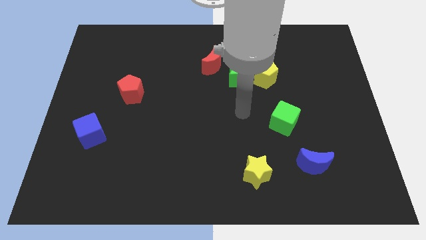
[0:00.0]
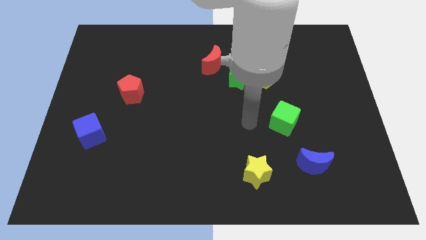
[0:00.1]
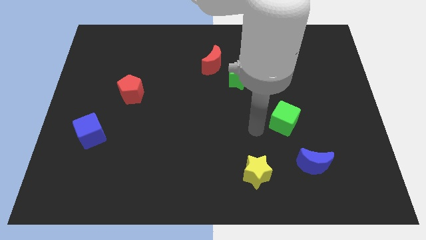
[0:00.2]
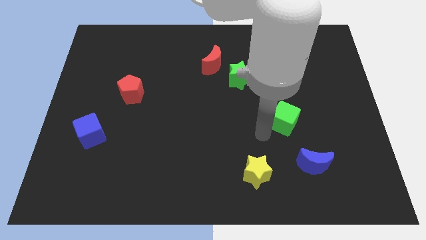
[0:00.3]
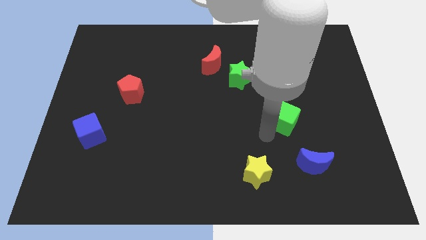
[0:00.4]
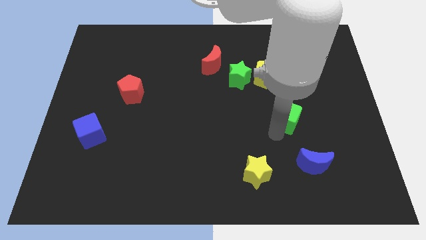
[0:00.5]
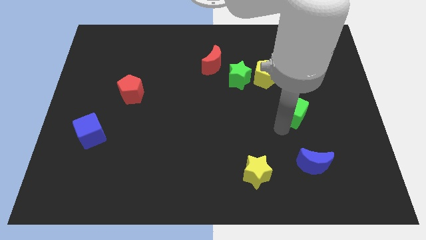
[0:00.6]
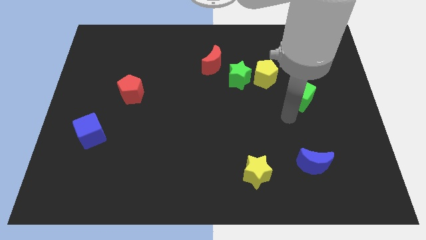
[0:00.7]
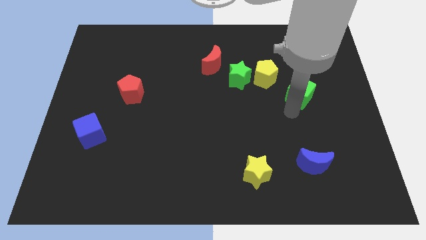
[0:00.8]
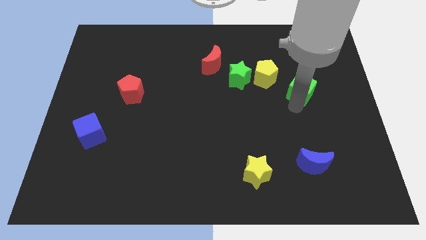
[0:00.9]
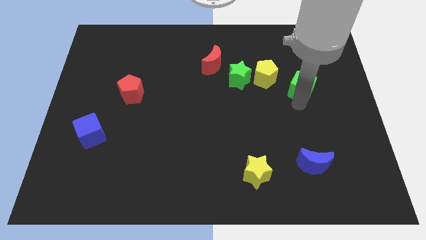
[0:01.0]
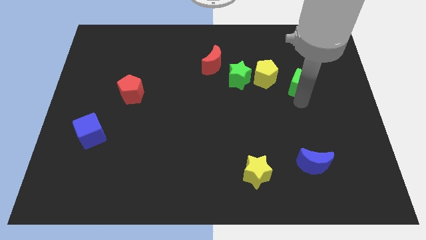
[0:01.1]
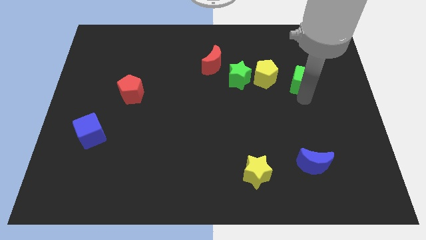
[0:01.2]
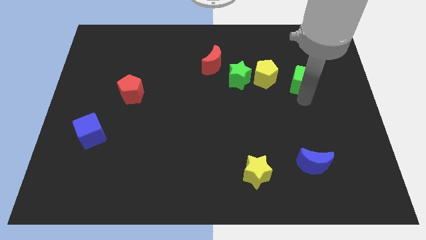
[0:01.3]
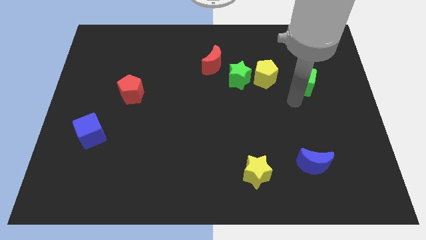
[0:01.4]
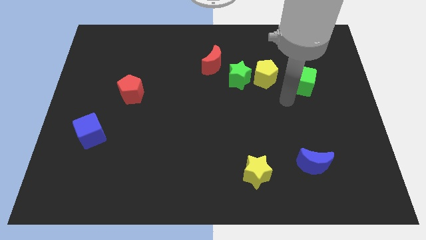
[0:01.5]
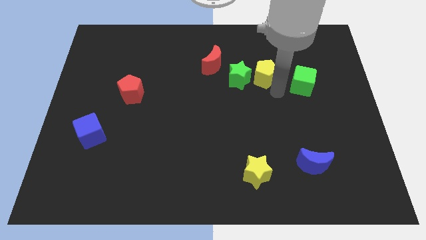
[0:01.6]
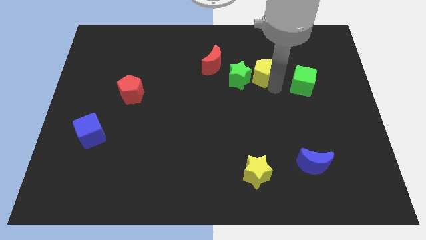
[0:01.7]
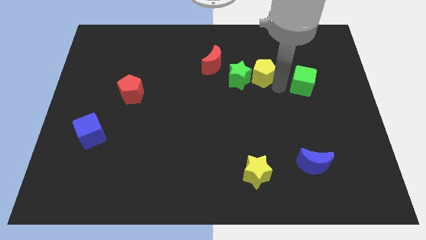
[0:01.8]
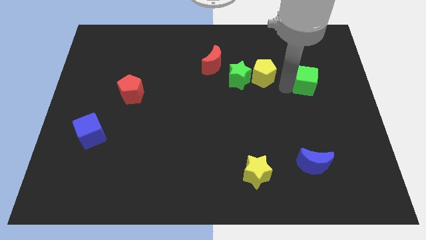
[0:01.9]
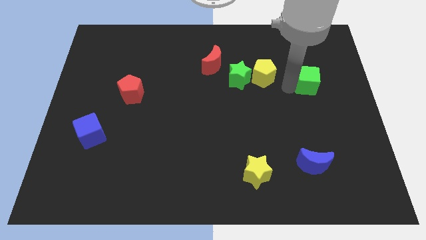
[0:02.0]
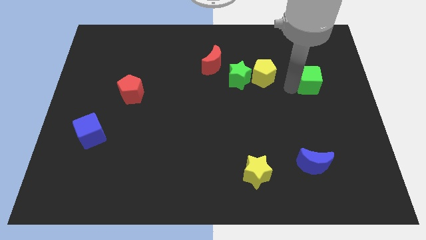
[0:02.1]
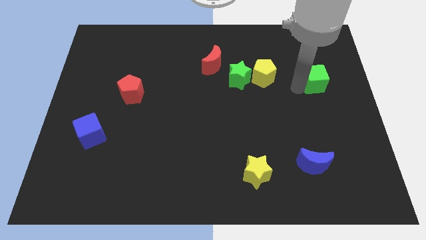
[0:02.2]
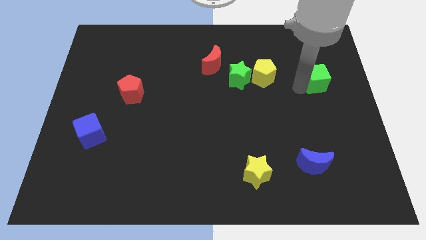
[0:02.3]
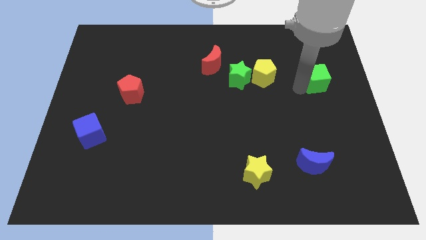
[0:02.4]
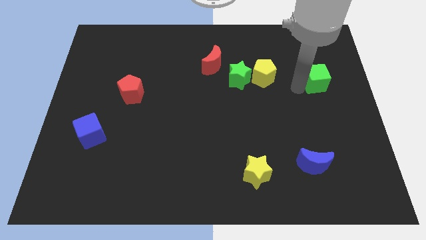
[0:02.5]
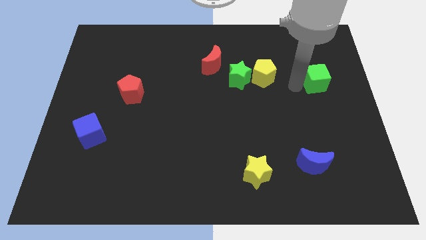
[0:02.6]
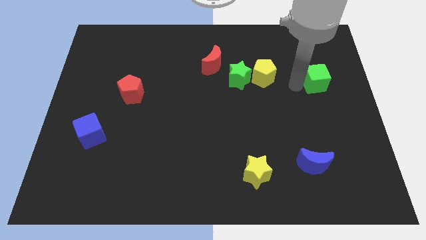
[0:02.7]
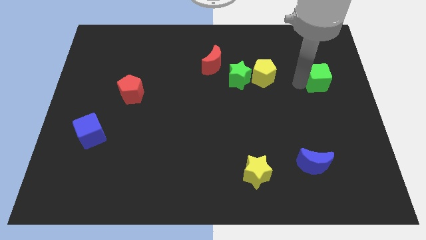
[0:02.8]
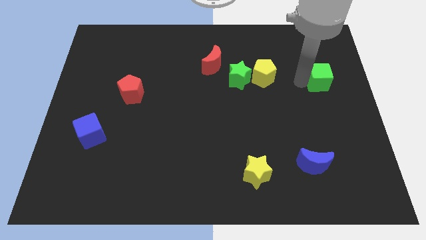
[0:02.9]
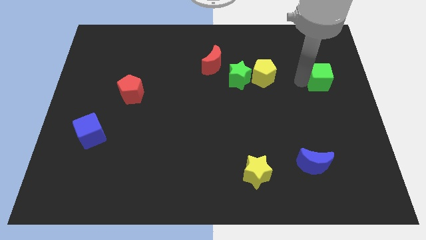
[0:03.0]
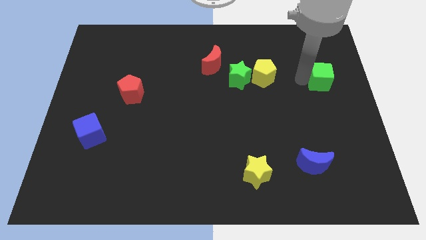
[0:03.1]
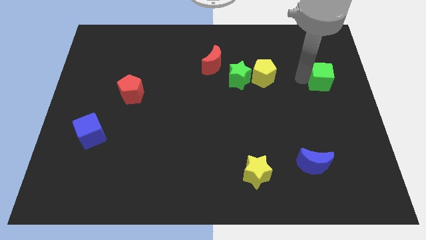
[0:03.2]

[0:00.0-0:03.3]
move the green cube parallel to the right side of the yellow pentagon

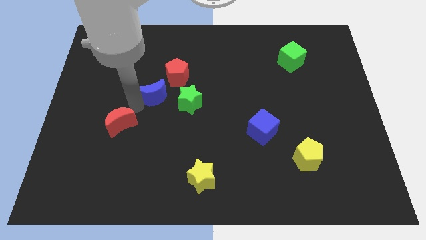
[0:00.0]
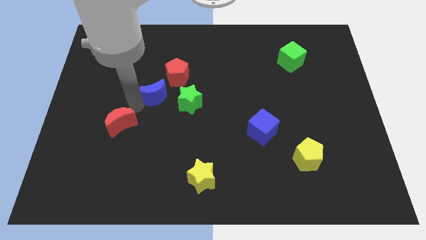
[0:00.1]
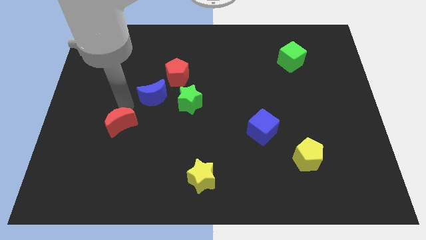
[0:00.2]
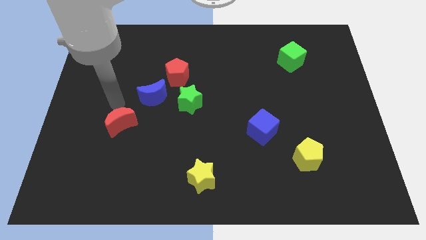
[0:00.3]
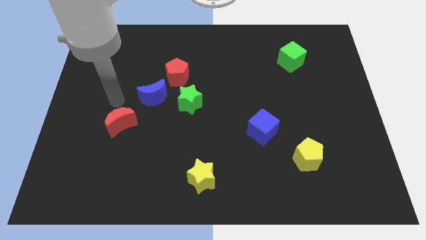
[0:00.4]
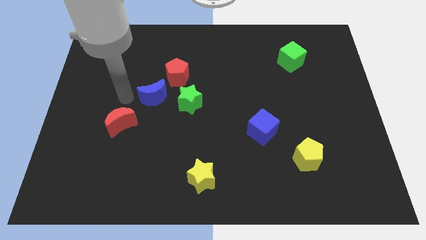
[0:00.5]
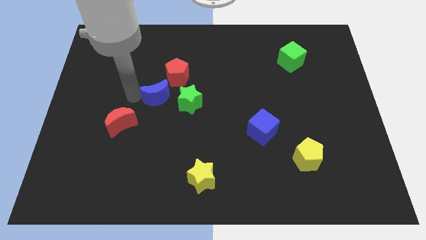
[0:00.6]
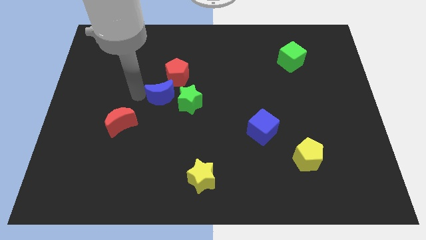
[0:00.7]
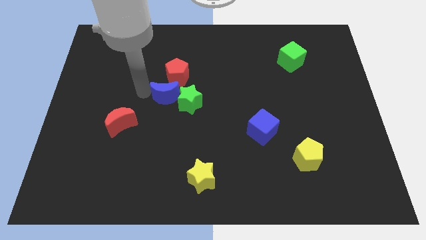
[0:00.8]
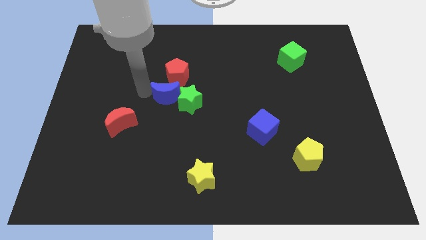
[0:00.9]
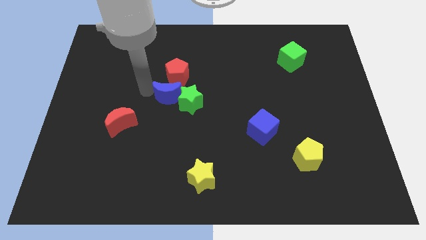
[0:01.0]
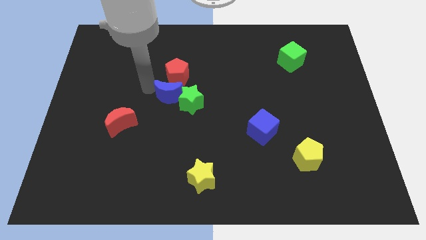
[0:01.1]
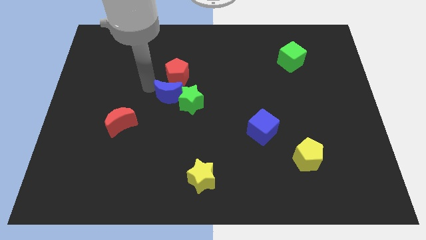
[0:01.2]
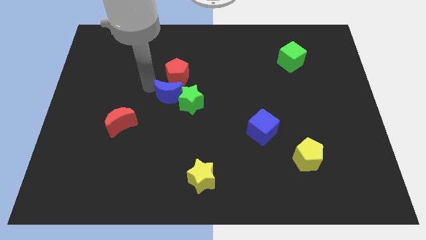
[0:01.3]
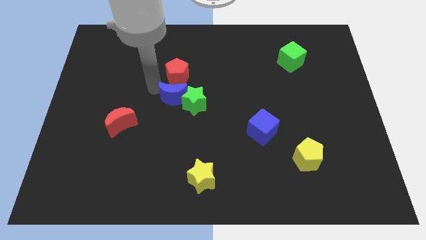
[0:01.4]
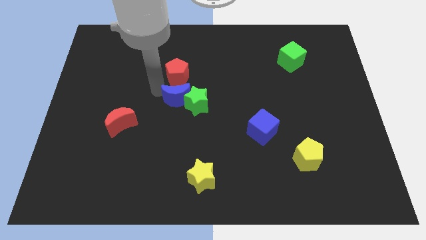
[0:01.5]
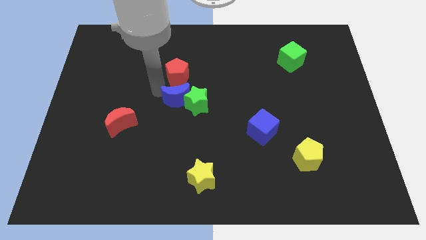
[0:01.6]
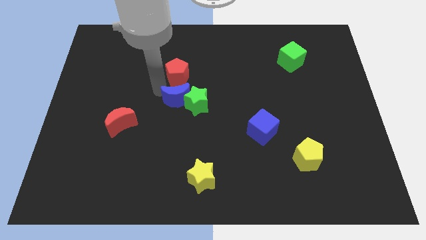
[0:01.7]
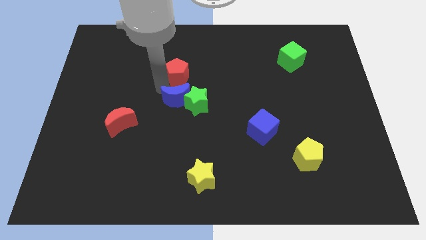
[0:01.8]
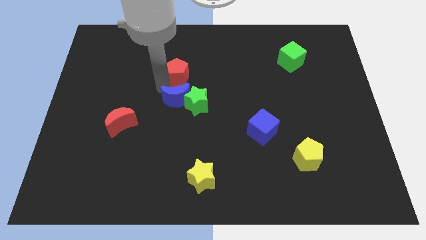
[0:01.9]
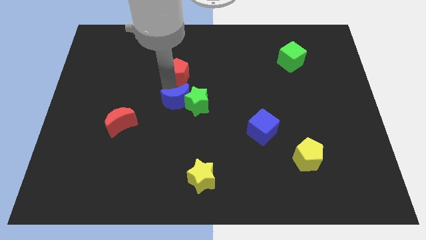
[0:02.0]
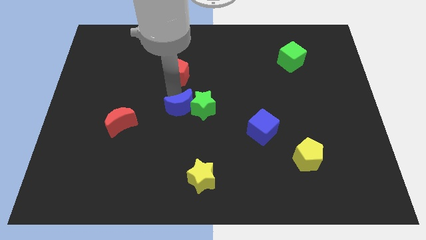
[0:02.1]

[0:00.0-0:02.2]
push the blue moon into green star to the left

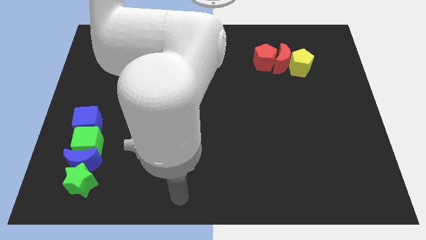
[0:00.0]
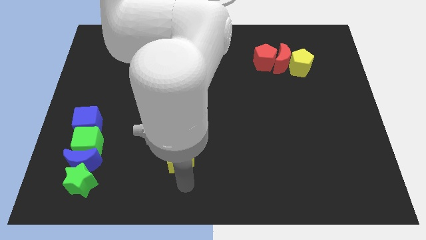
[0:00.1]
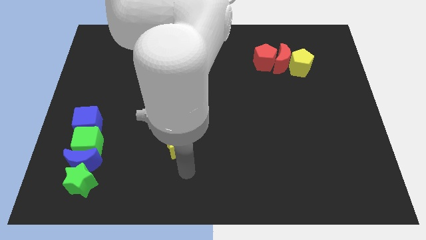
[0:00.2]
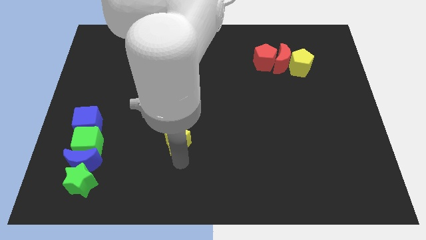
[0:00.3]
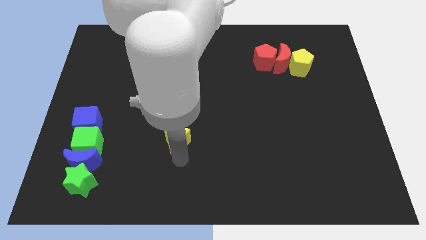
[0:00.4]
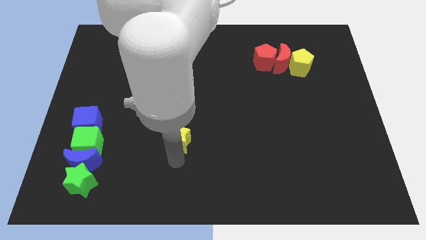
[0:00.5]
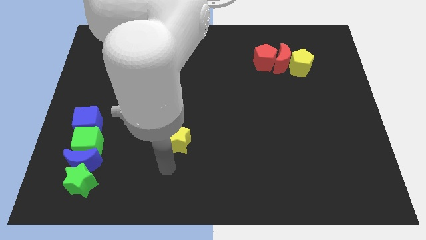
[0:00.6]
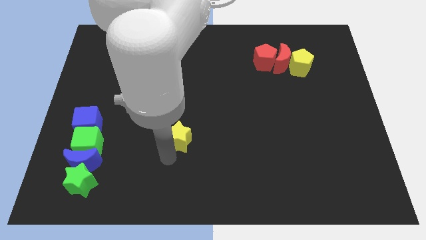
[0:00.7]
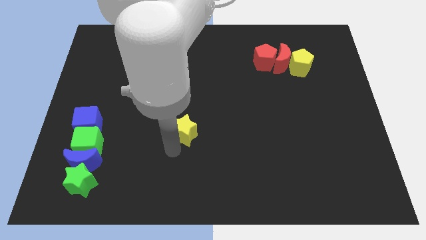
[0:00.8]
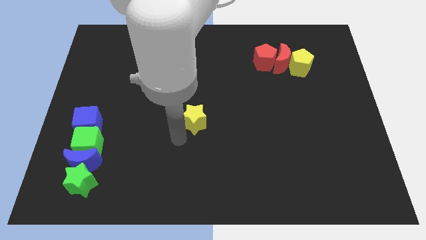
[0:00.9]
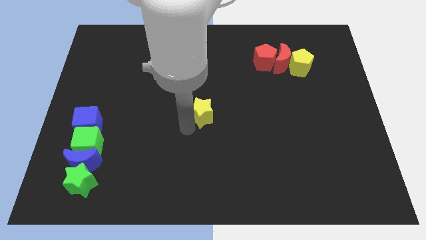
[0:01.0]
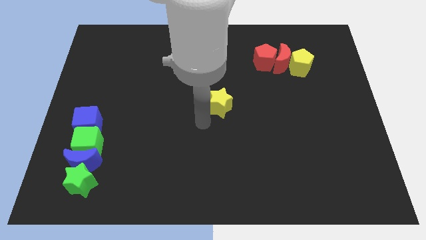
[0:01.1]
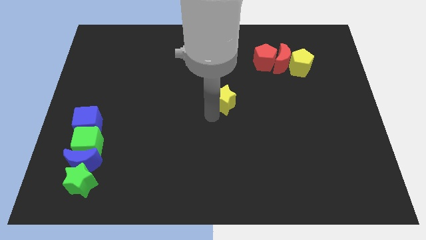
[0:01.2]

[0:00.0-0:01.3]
push the yellow star towards the red blocks

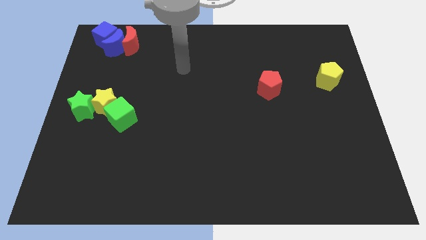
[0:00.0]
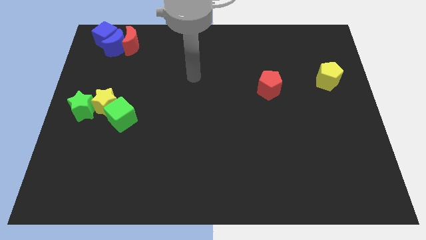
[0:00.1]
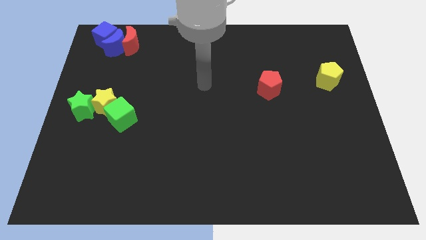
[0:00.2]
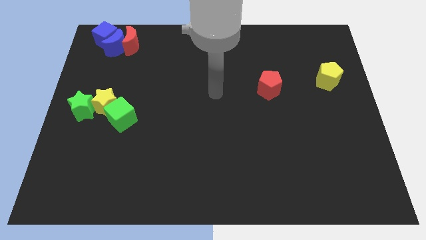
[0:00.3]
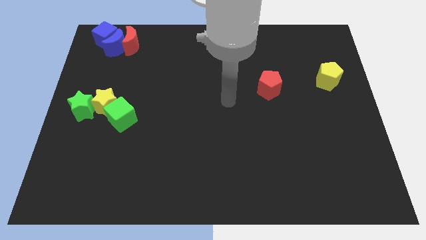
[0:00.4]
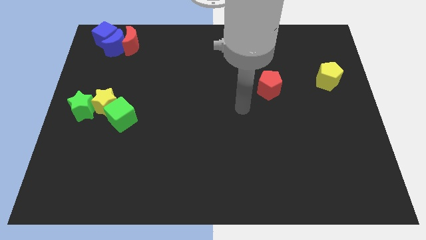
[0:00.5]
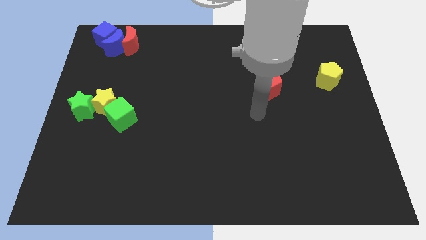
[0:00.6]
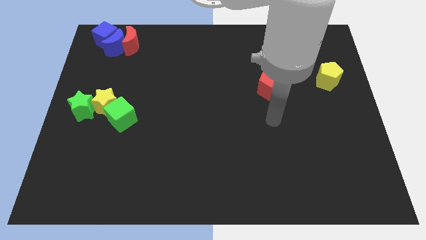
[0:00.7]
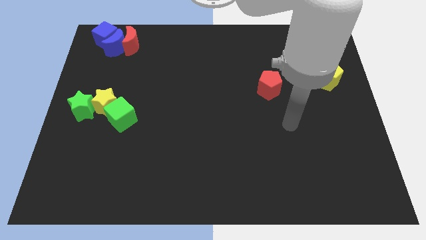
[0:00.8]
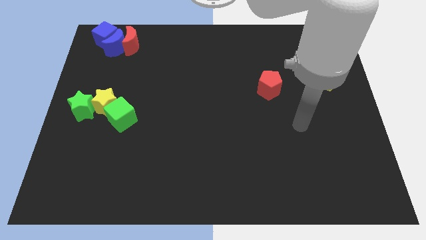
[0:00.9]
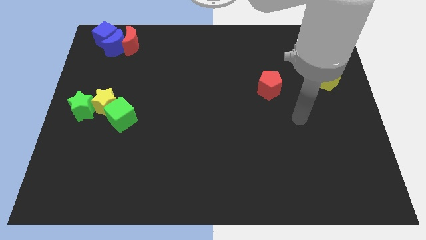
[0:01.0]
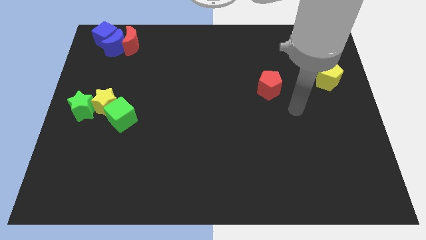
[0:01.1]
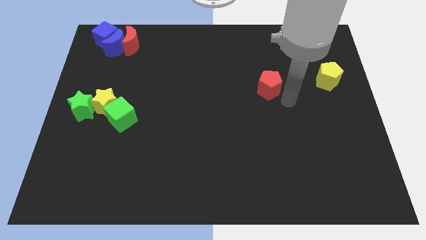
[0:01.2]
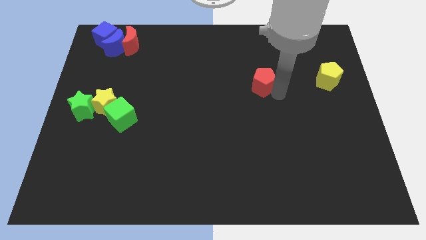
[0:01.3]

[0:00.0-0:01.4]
move the arm towards the red pentagon

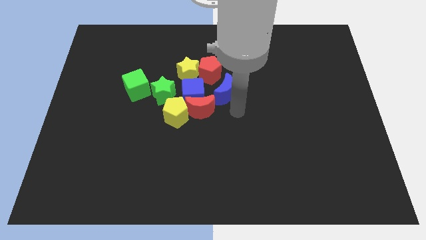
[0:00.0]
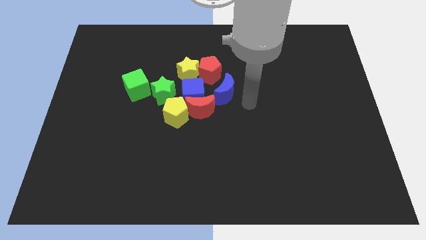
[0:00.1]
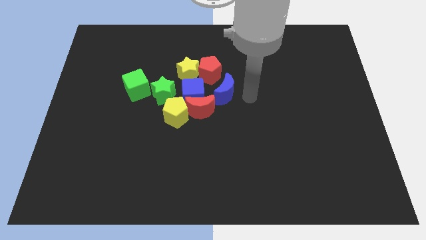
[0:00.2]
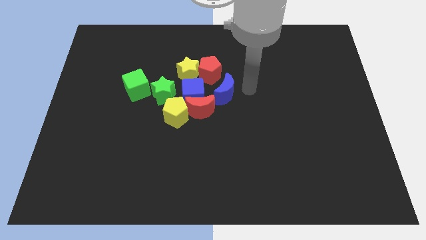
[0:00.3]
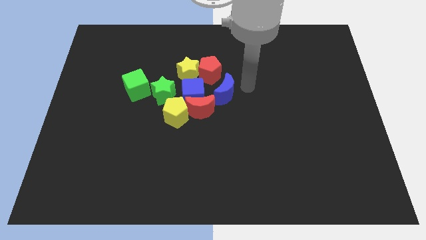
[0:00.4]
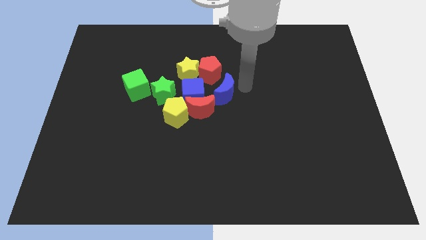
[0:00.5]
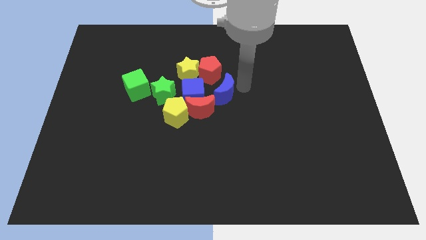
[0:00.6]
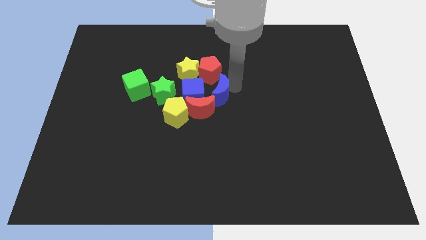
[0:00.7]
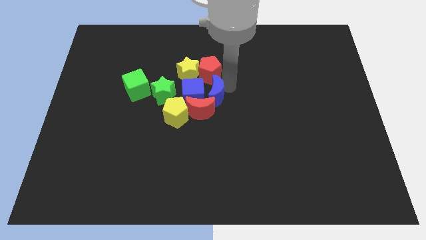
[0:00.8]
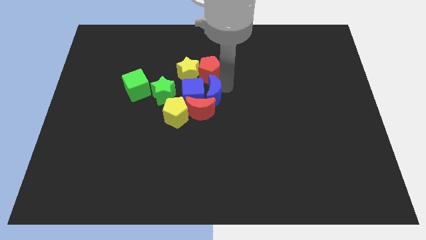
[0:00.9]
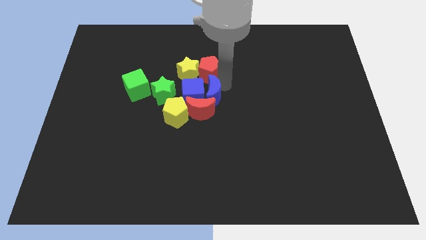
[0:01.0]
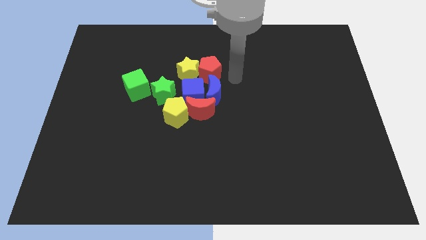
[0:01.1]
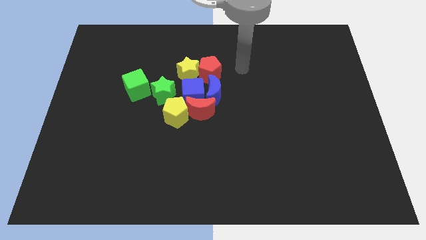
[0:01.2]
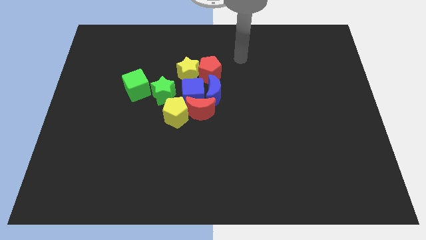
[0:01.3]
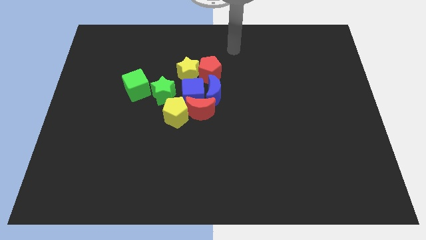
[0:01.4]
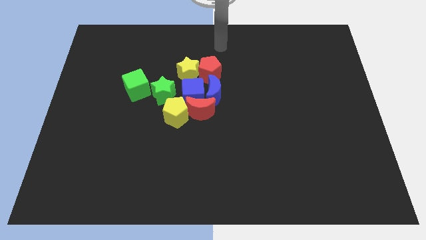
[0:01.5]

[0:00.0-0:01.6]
slide the blue moon close to the blue cube
